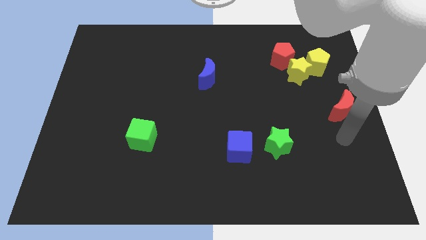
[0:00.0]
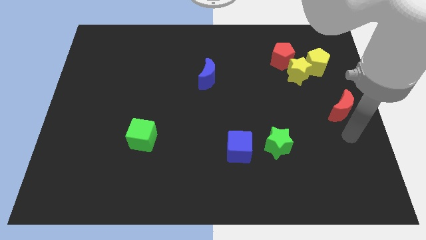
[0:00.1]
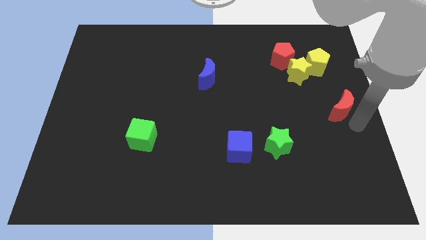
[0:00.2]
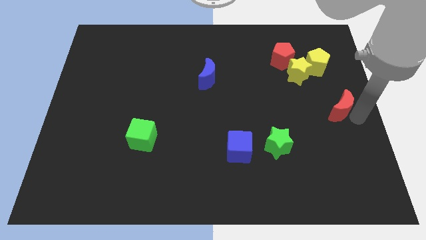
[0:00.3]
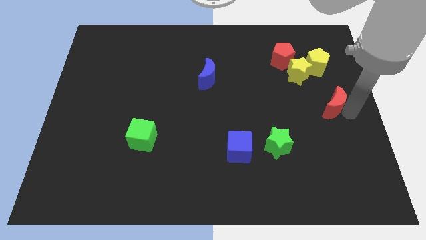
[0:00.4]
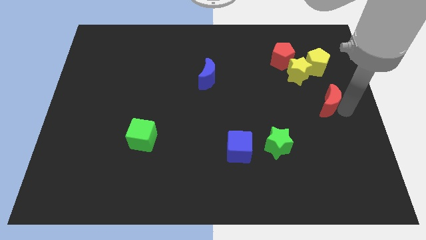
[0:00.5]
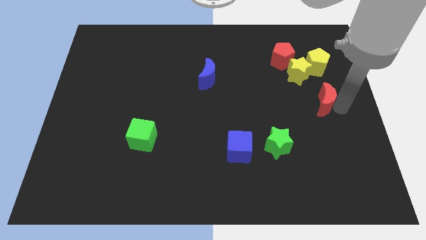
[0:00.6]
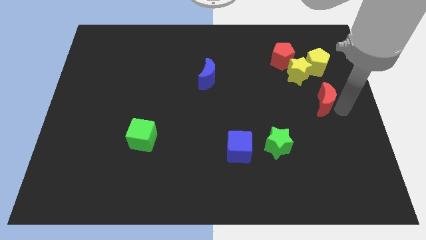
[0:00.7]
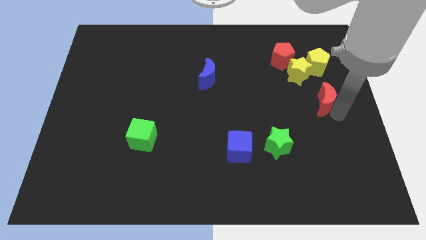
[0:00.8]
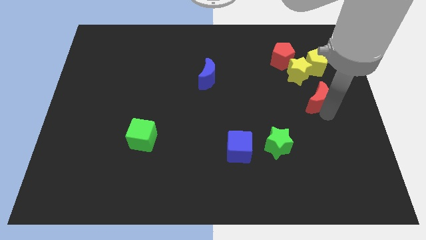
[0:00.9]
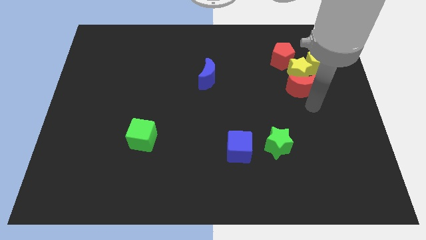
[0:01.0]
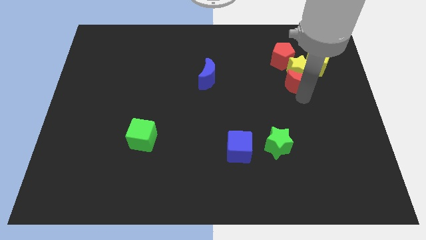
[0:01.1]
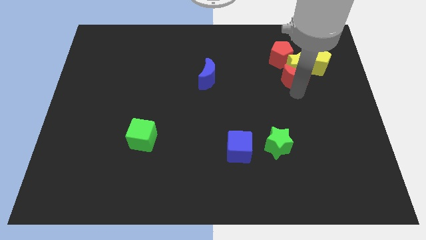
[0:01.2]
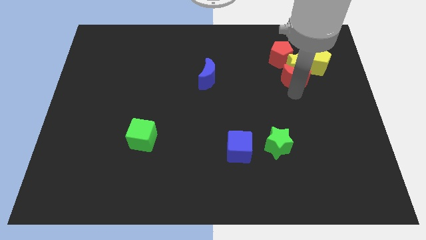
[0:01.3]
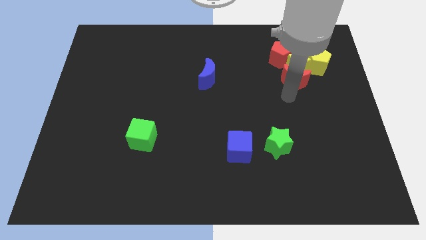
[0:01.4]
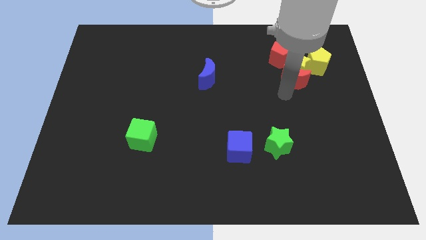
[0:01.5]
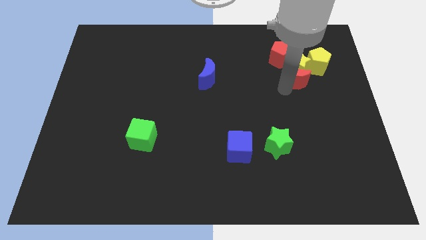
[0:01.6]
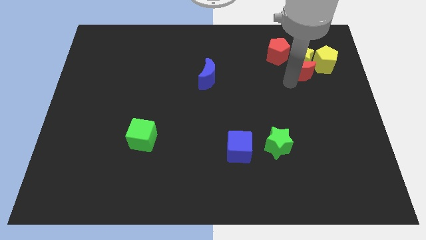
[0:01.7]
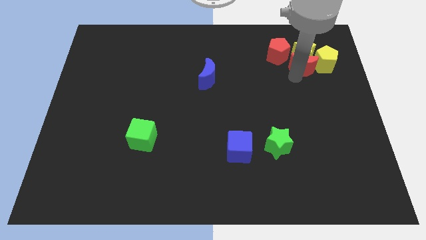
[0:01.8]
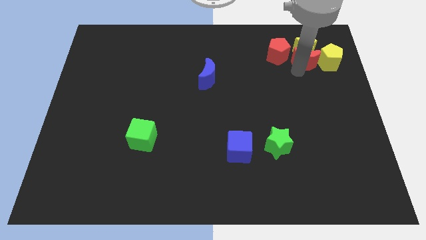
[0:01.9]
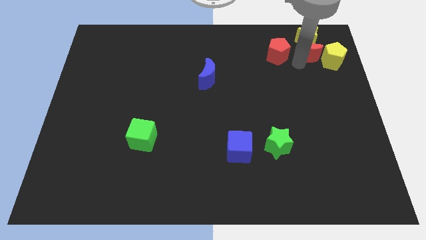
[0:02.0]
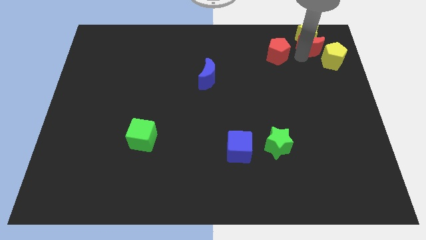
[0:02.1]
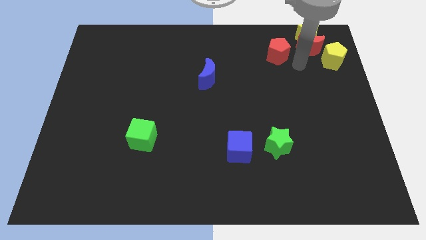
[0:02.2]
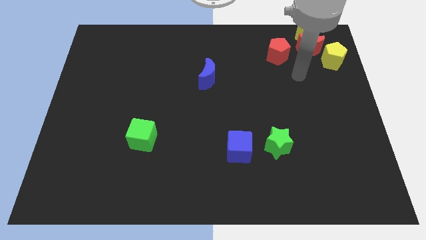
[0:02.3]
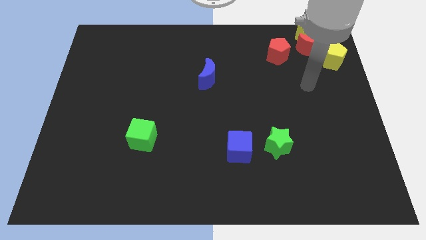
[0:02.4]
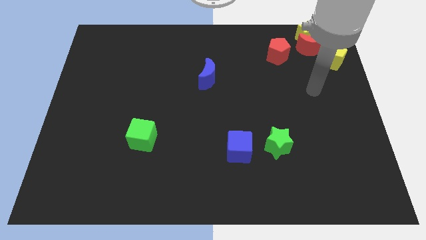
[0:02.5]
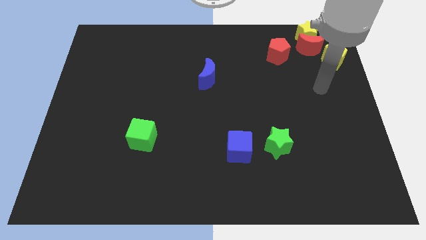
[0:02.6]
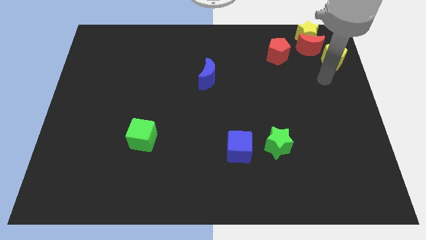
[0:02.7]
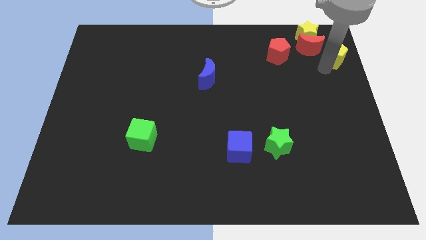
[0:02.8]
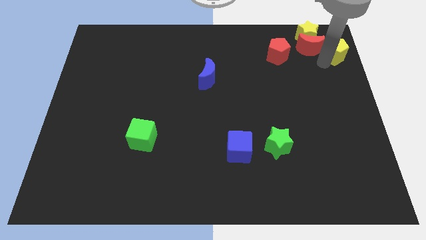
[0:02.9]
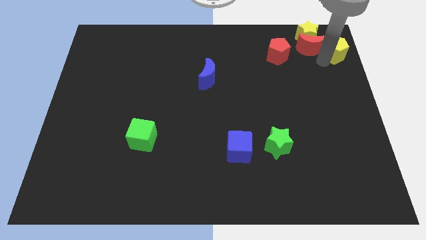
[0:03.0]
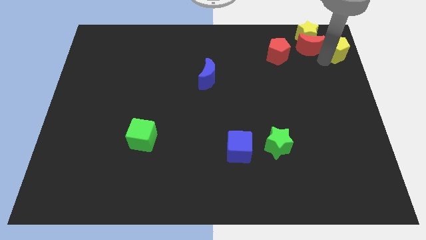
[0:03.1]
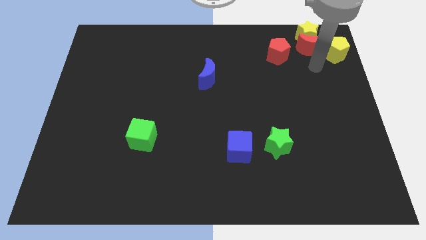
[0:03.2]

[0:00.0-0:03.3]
push the red moon into the yellow star

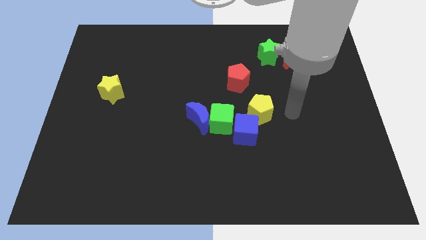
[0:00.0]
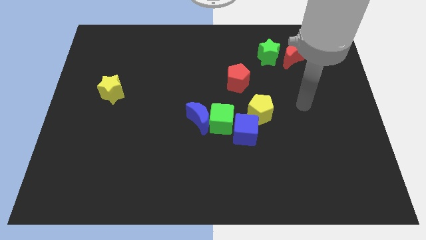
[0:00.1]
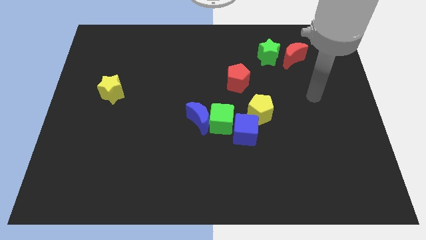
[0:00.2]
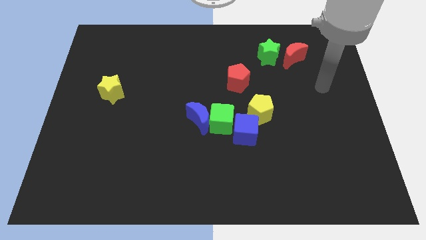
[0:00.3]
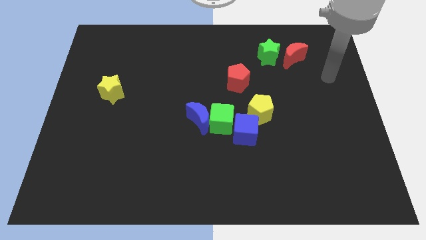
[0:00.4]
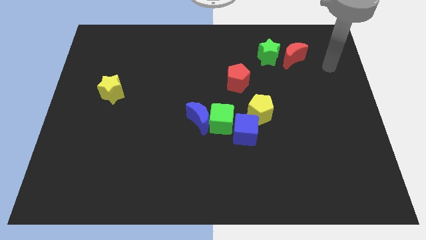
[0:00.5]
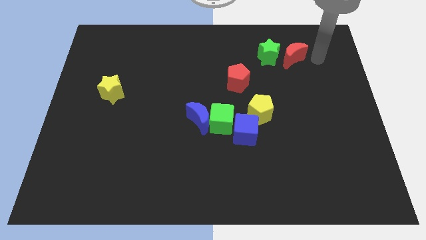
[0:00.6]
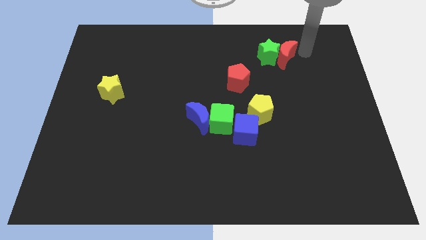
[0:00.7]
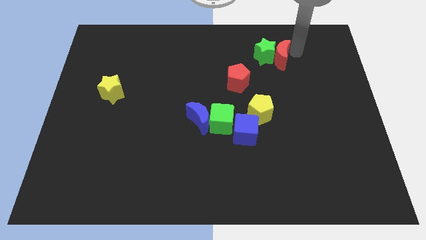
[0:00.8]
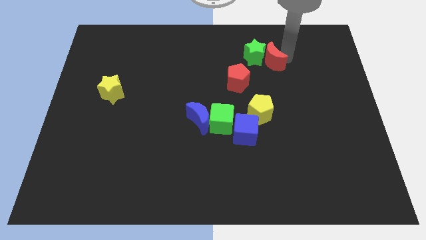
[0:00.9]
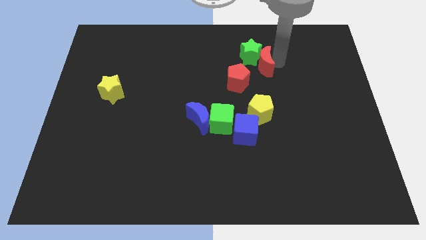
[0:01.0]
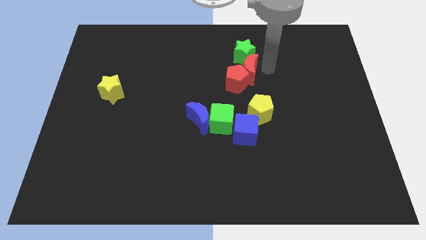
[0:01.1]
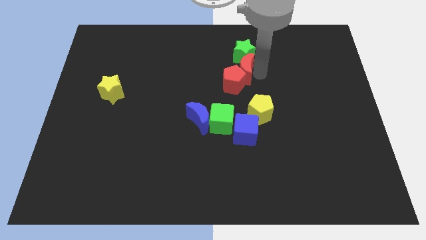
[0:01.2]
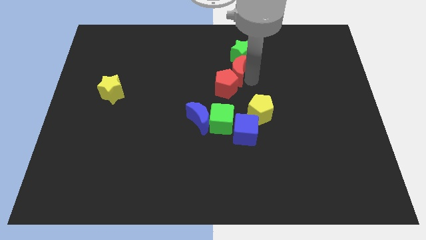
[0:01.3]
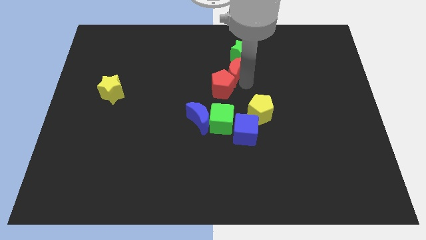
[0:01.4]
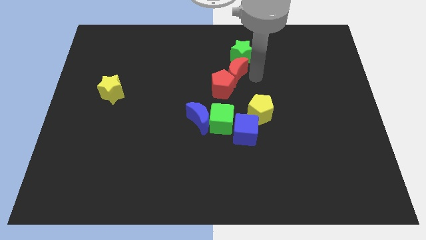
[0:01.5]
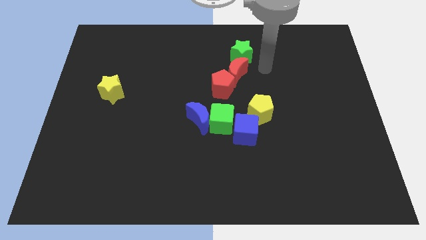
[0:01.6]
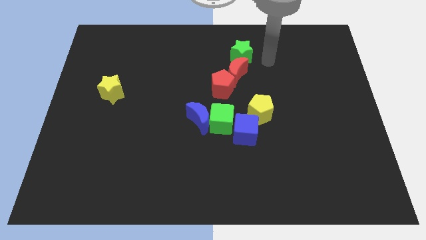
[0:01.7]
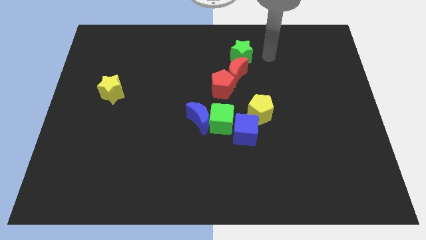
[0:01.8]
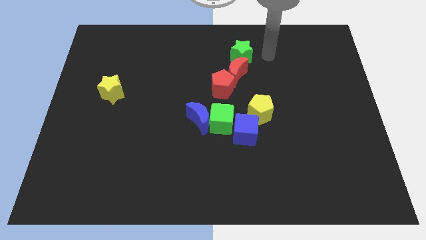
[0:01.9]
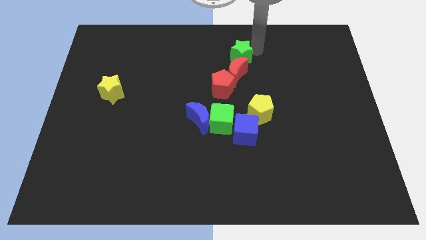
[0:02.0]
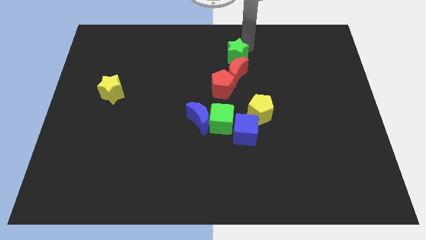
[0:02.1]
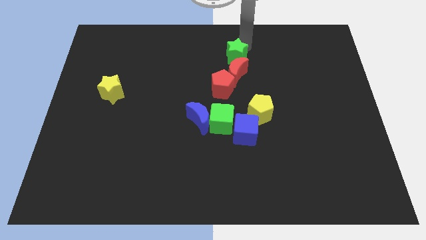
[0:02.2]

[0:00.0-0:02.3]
place the red moon between the green star and red pentagon

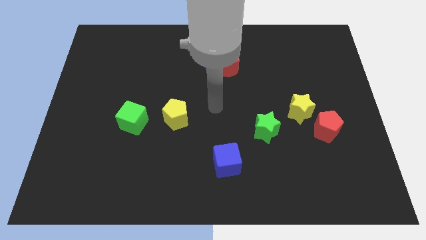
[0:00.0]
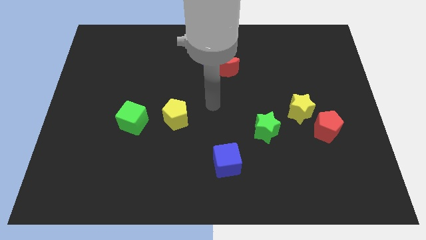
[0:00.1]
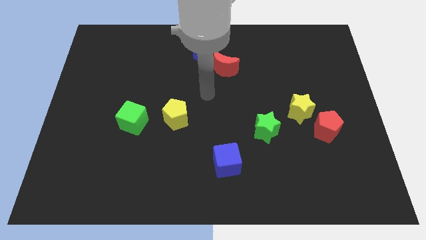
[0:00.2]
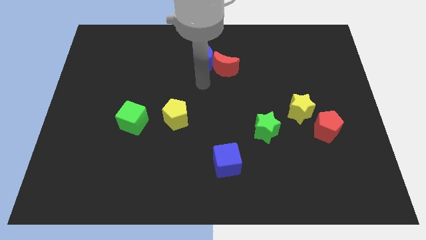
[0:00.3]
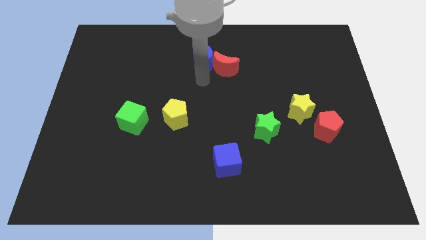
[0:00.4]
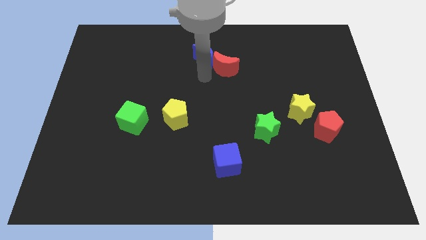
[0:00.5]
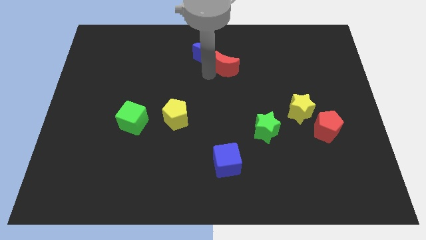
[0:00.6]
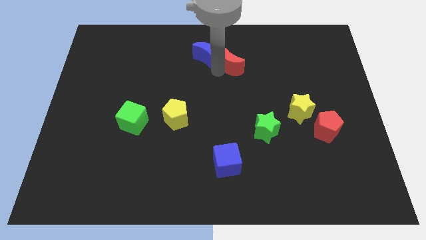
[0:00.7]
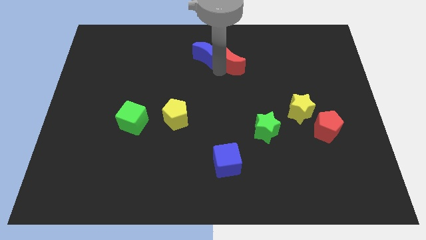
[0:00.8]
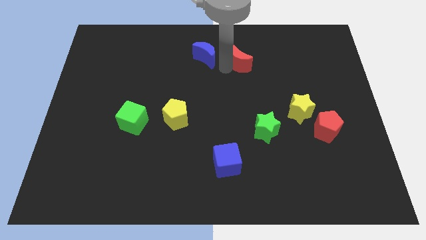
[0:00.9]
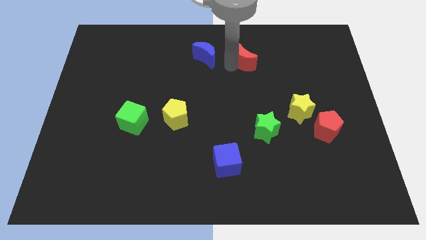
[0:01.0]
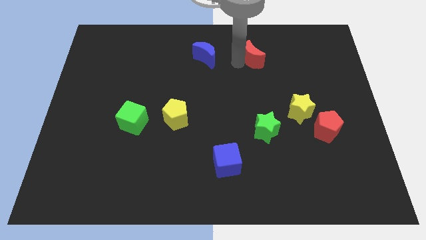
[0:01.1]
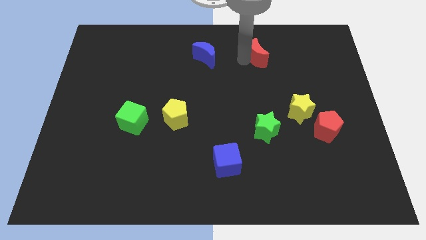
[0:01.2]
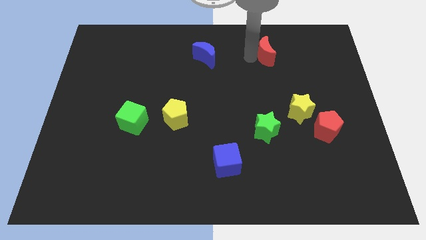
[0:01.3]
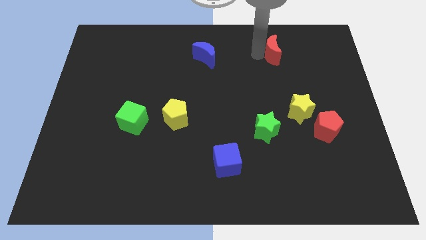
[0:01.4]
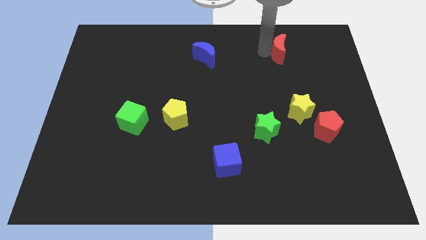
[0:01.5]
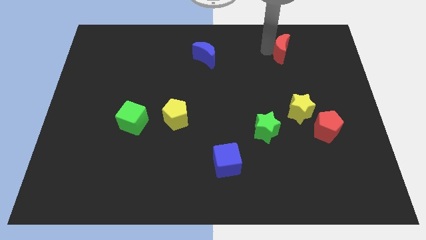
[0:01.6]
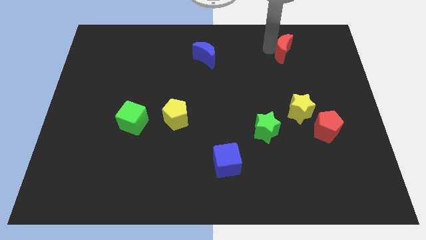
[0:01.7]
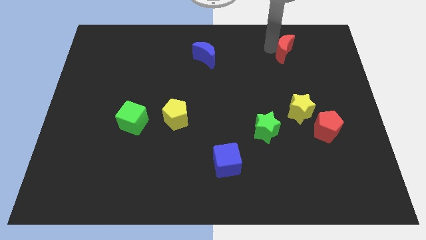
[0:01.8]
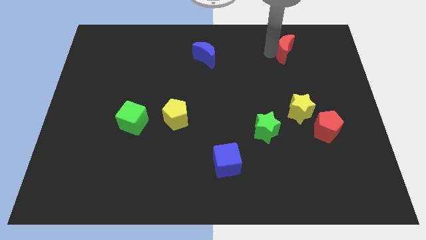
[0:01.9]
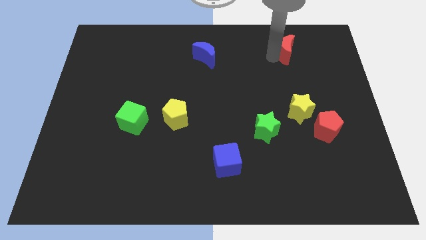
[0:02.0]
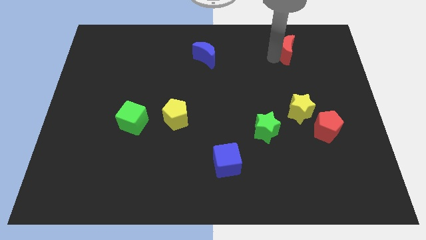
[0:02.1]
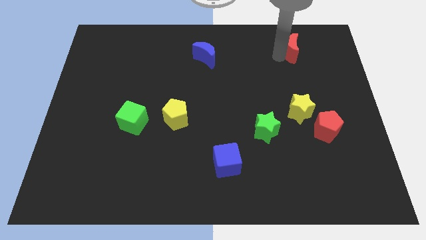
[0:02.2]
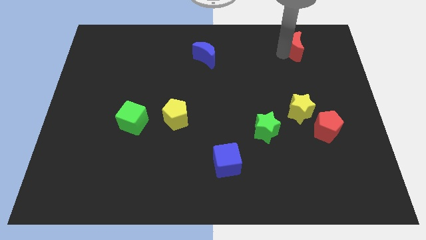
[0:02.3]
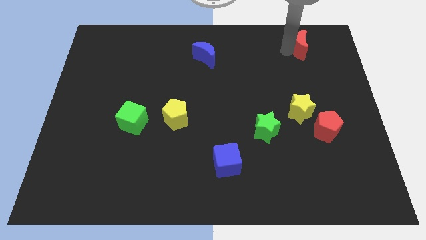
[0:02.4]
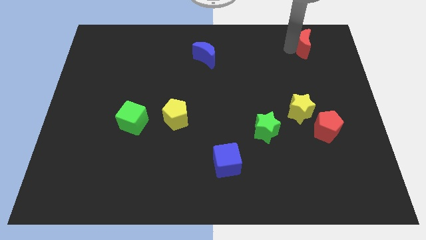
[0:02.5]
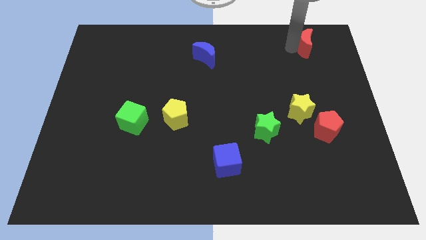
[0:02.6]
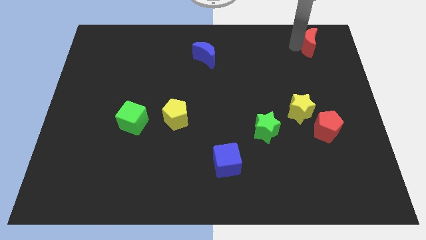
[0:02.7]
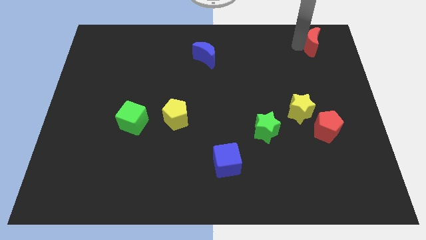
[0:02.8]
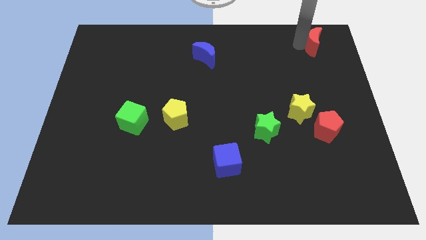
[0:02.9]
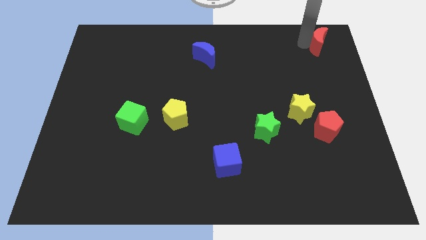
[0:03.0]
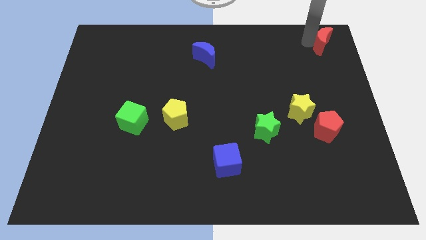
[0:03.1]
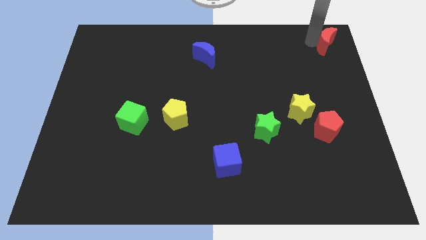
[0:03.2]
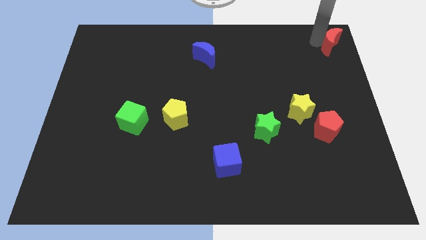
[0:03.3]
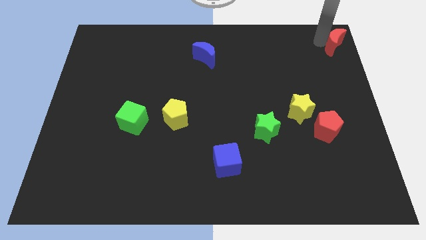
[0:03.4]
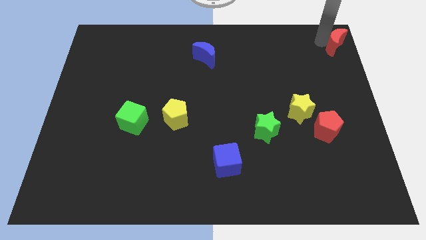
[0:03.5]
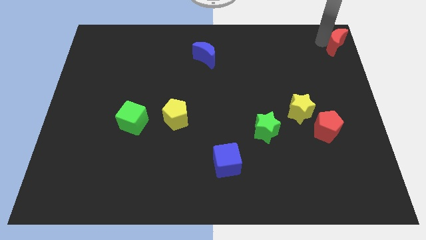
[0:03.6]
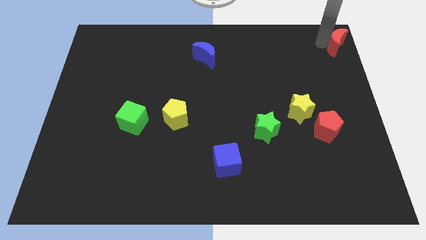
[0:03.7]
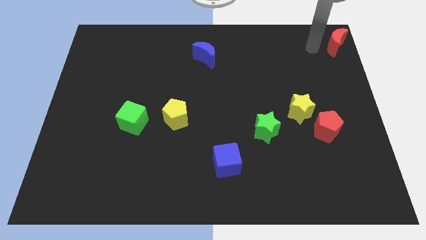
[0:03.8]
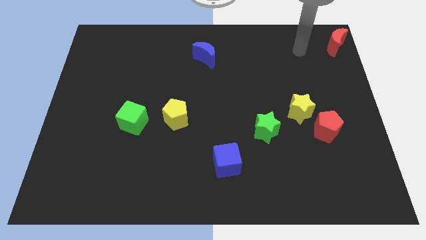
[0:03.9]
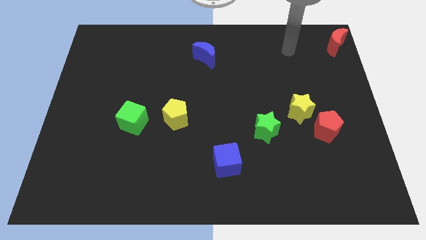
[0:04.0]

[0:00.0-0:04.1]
move the red moon to the top right
